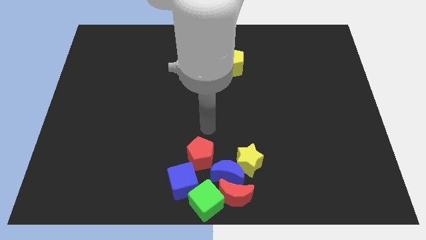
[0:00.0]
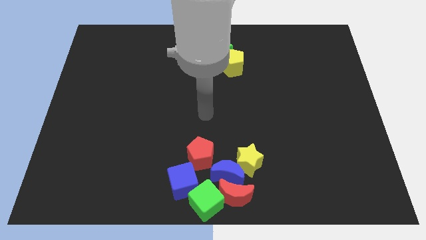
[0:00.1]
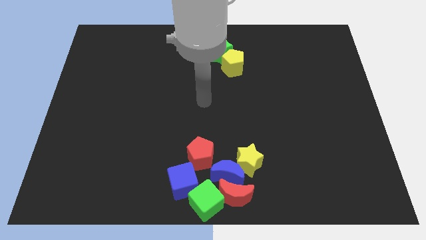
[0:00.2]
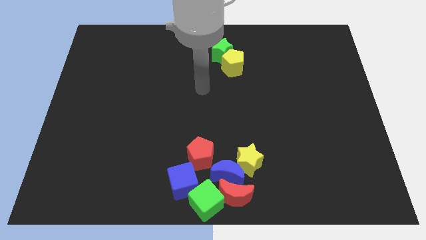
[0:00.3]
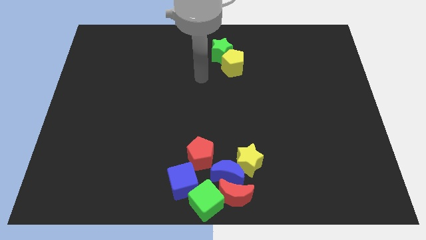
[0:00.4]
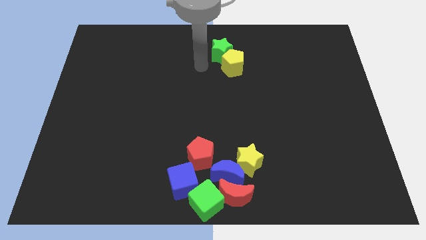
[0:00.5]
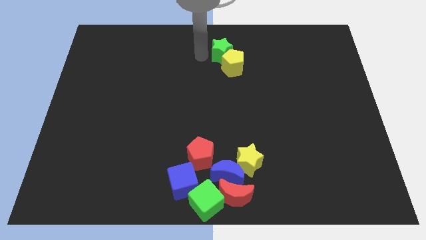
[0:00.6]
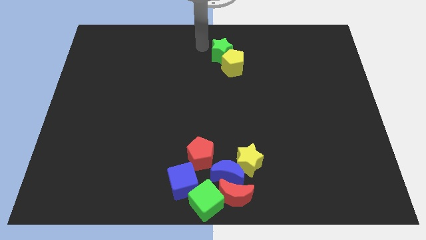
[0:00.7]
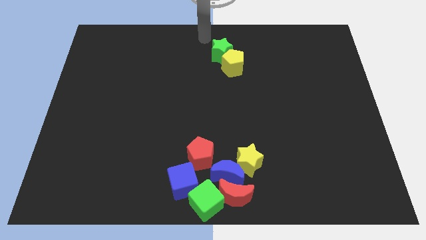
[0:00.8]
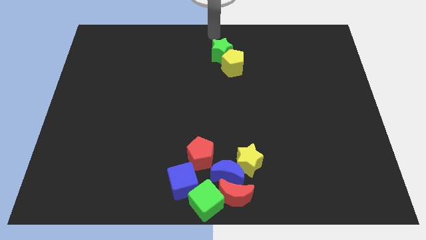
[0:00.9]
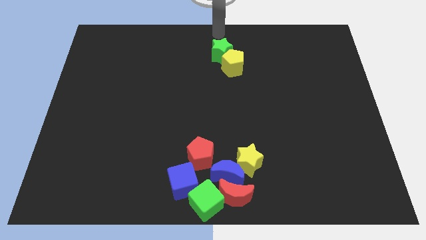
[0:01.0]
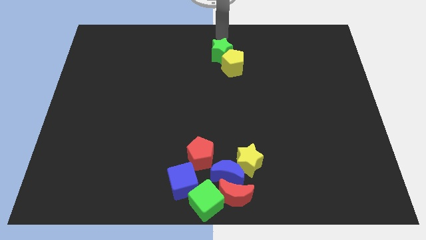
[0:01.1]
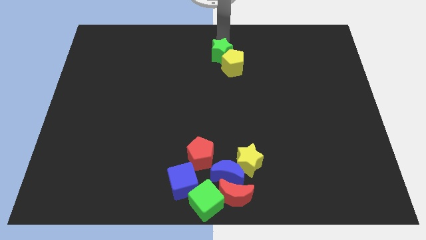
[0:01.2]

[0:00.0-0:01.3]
touch the green star with your arm

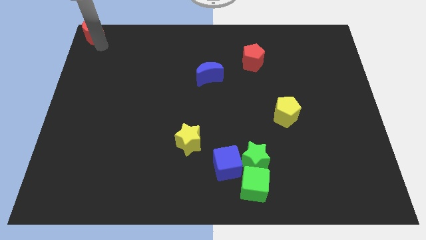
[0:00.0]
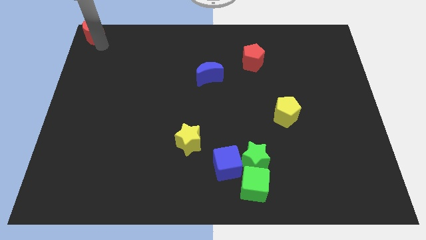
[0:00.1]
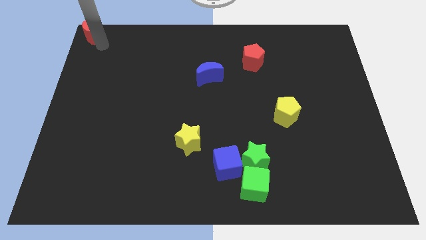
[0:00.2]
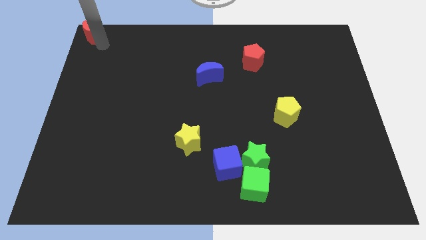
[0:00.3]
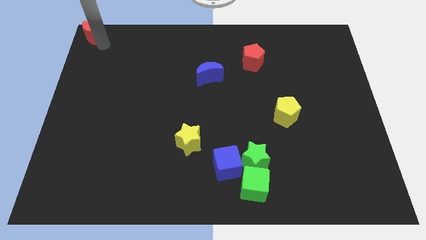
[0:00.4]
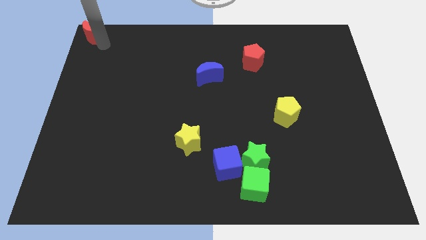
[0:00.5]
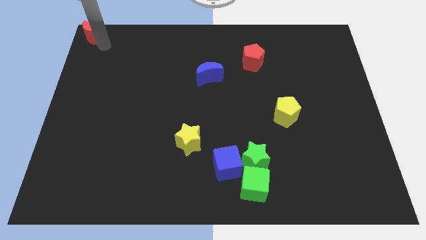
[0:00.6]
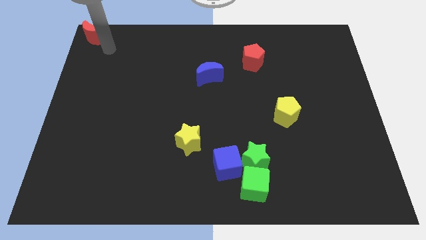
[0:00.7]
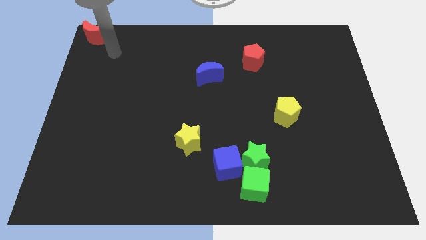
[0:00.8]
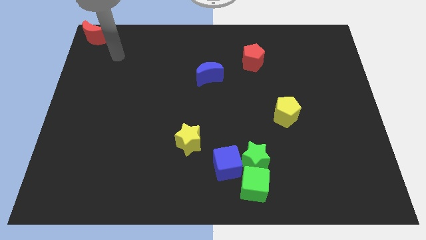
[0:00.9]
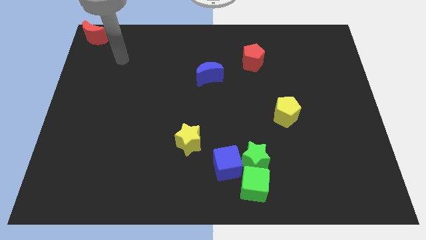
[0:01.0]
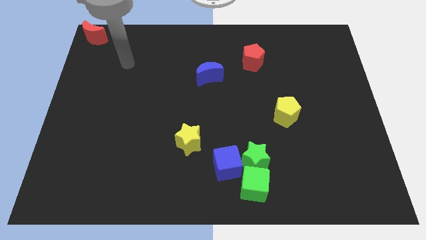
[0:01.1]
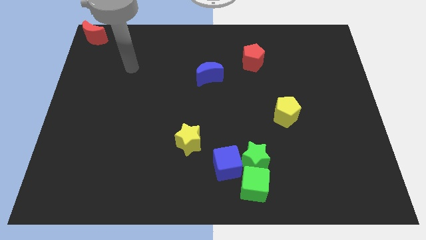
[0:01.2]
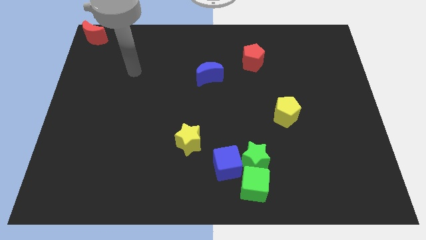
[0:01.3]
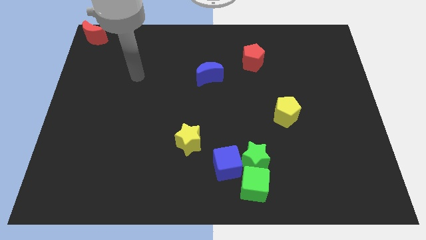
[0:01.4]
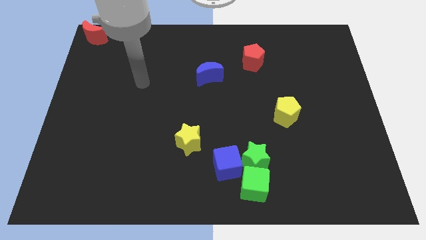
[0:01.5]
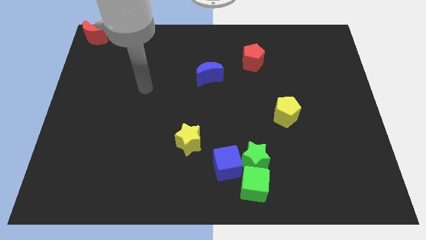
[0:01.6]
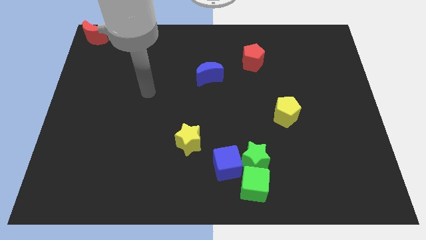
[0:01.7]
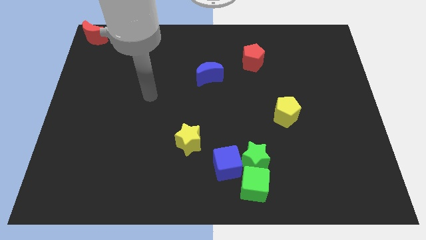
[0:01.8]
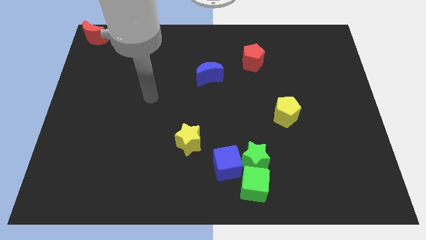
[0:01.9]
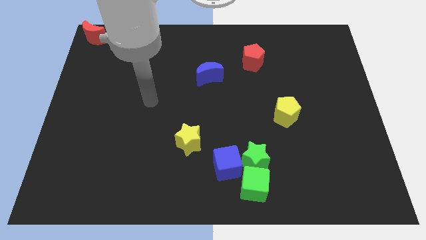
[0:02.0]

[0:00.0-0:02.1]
move your arm away from red moon

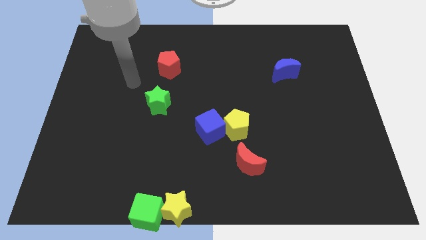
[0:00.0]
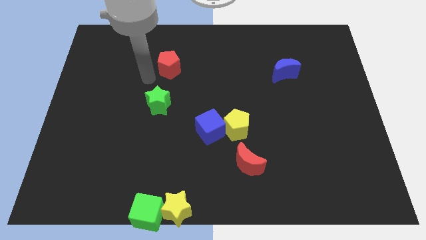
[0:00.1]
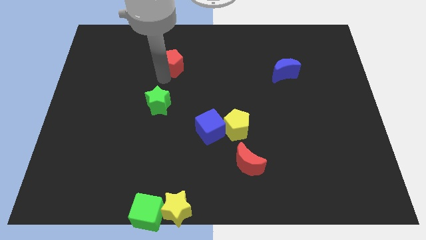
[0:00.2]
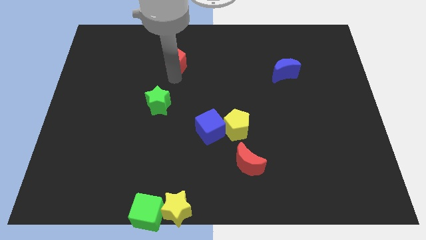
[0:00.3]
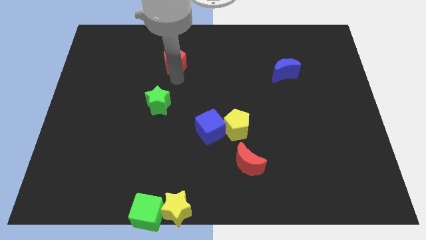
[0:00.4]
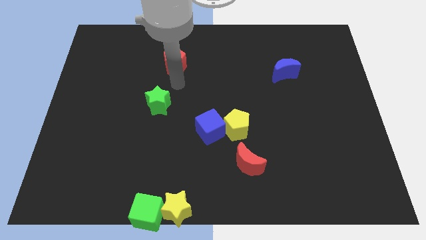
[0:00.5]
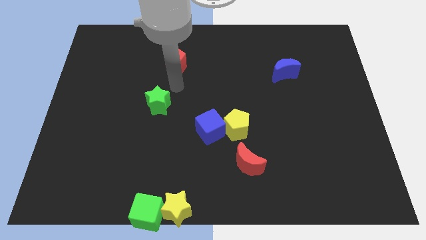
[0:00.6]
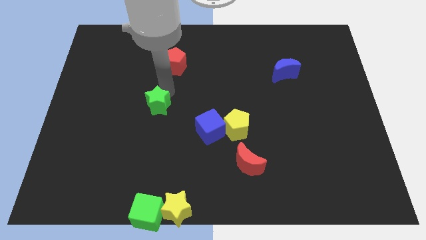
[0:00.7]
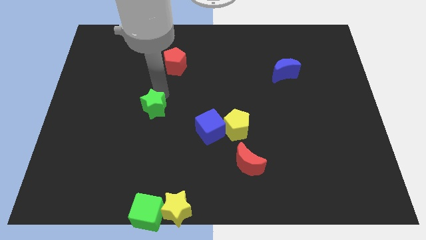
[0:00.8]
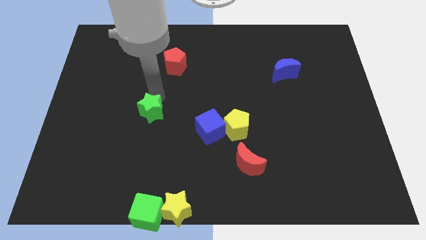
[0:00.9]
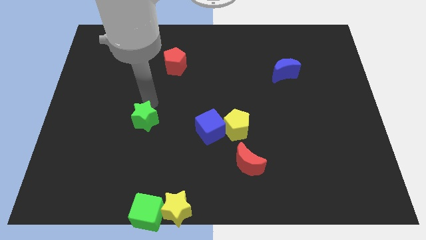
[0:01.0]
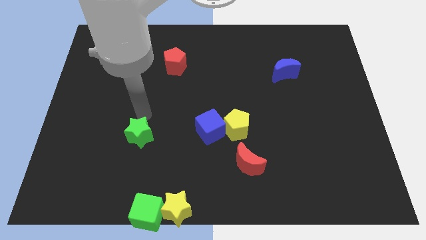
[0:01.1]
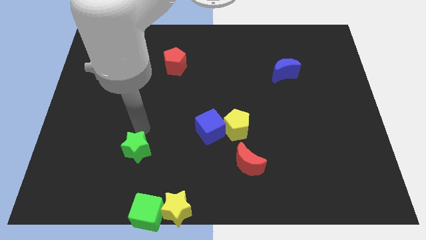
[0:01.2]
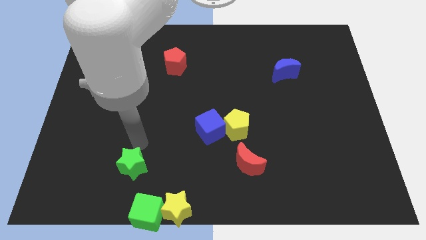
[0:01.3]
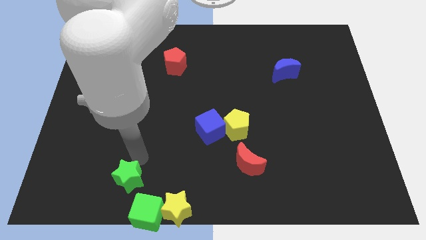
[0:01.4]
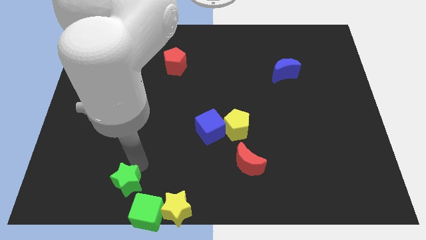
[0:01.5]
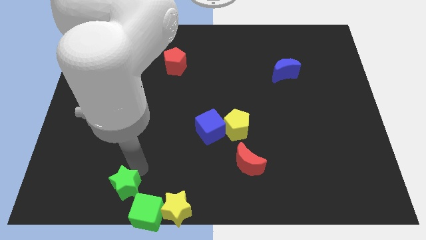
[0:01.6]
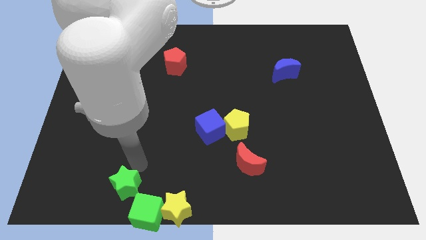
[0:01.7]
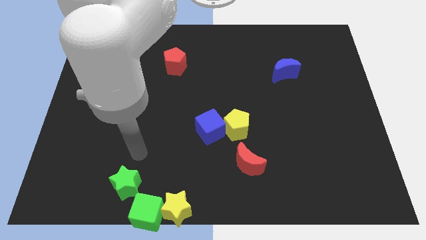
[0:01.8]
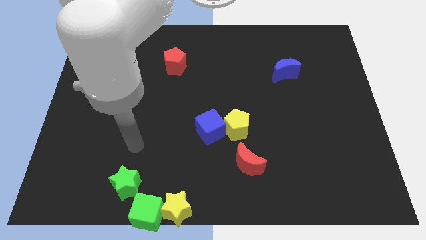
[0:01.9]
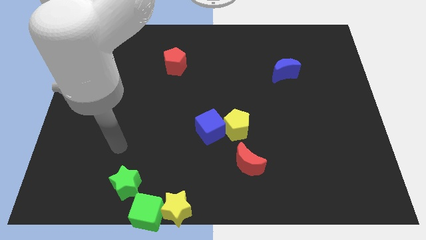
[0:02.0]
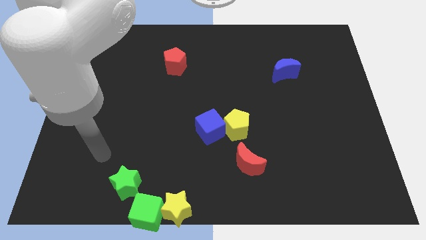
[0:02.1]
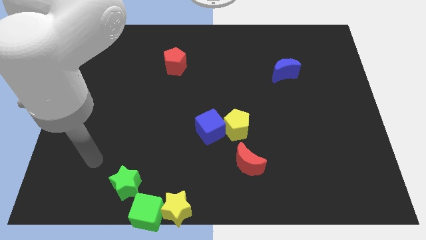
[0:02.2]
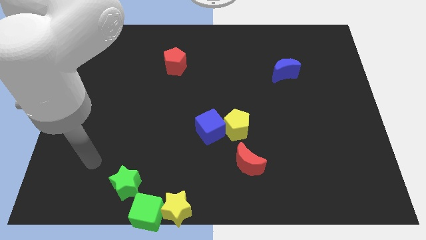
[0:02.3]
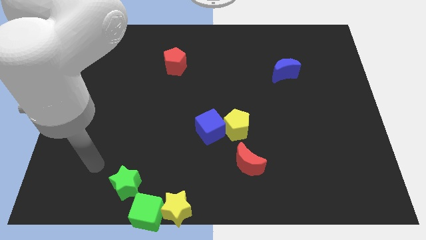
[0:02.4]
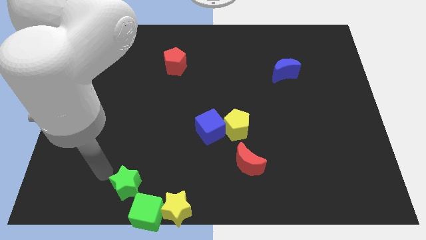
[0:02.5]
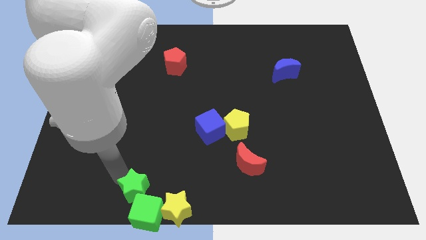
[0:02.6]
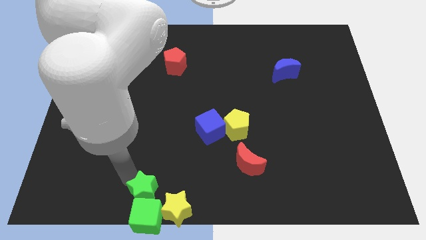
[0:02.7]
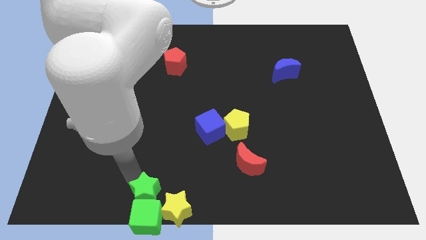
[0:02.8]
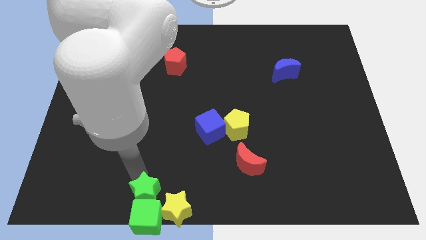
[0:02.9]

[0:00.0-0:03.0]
move the green star above the green cube

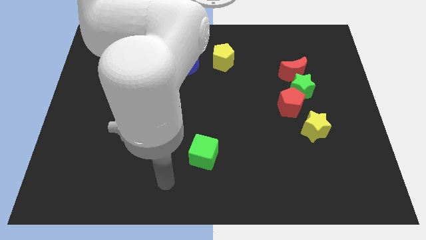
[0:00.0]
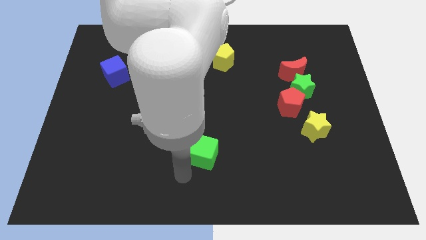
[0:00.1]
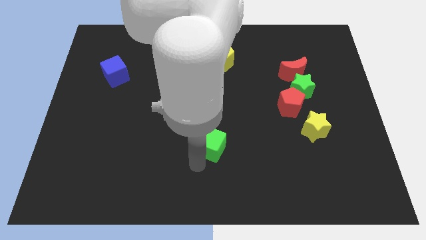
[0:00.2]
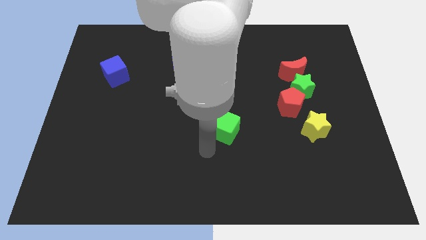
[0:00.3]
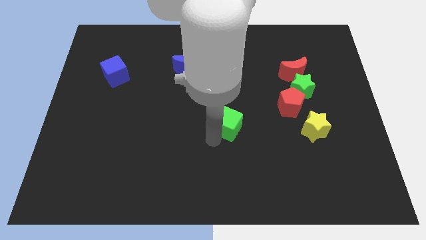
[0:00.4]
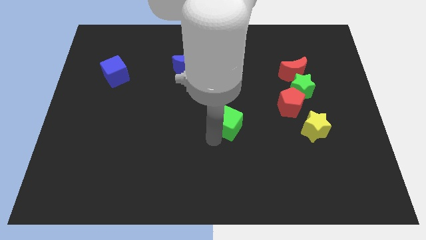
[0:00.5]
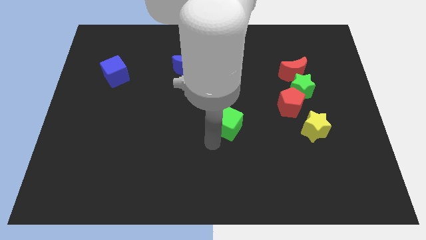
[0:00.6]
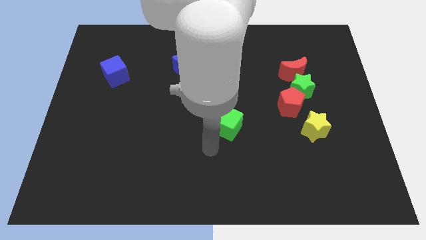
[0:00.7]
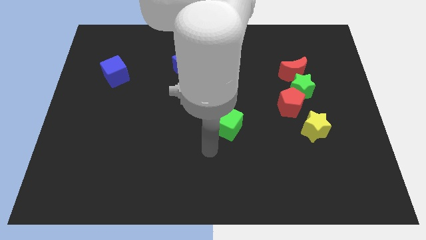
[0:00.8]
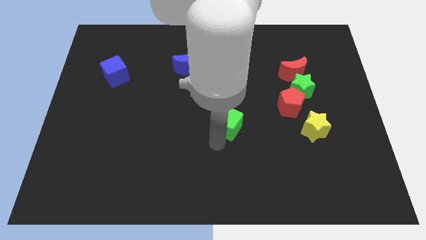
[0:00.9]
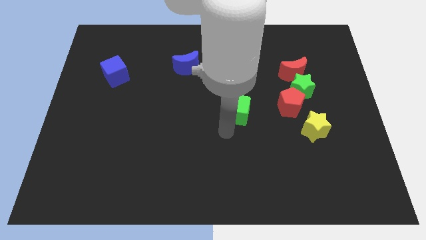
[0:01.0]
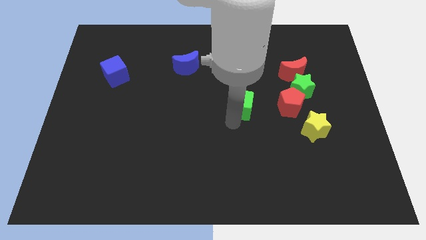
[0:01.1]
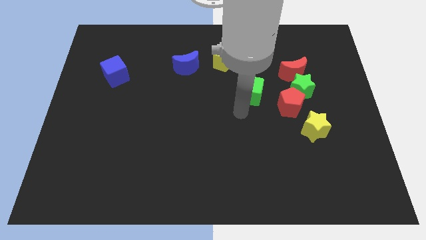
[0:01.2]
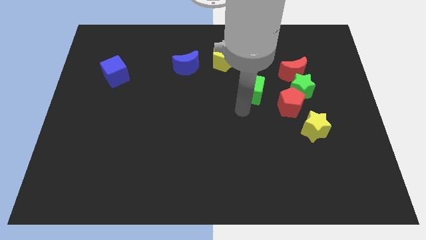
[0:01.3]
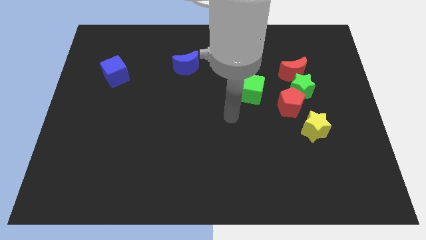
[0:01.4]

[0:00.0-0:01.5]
move the green cube towards the red crescent

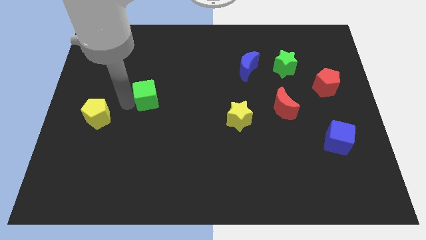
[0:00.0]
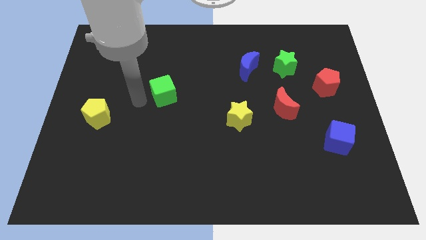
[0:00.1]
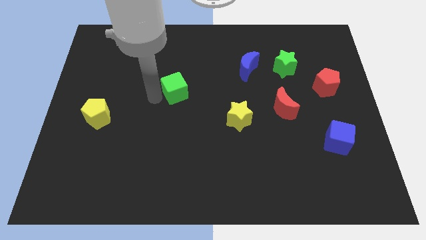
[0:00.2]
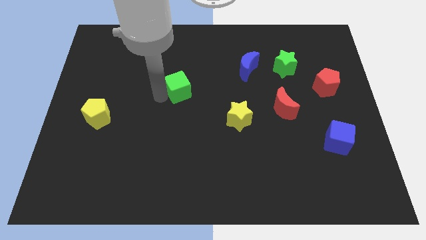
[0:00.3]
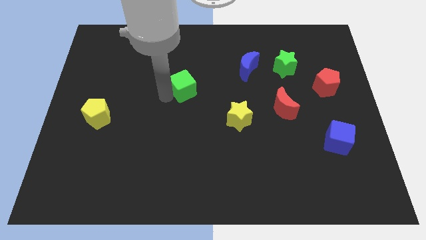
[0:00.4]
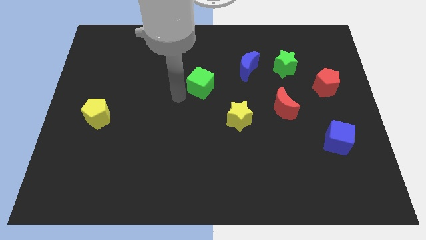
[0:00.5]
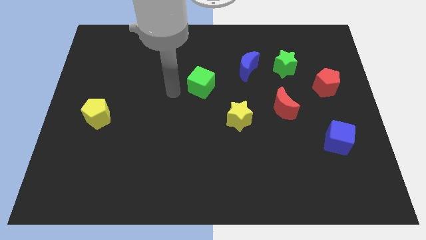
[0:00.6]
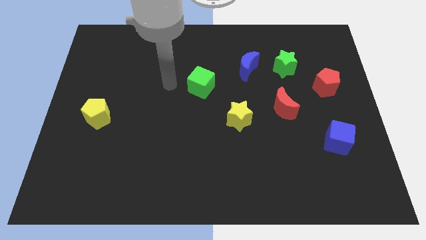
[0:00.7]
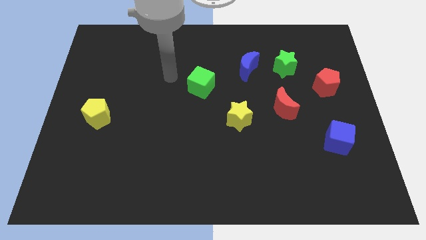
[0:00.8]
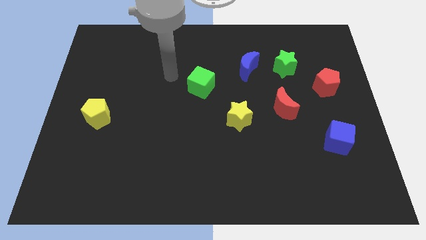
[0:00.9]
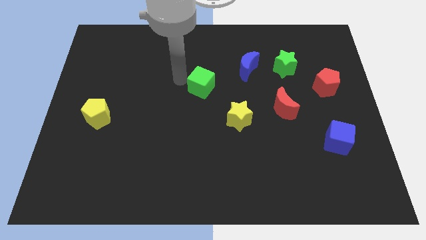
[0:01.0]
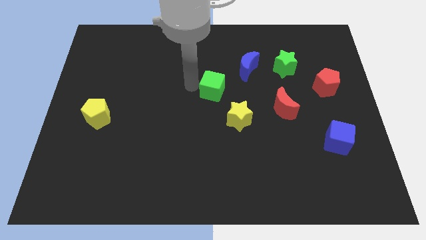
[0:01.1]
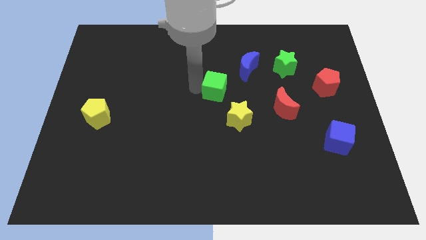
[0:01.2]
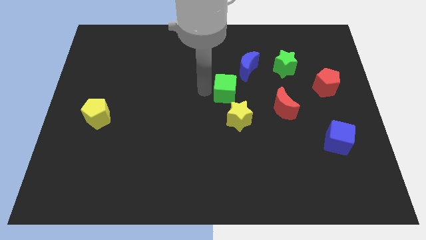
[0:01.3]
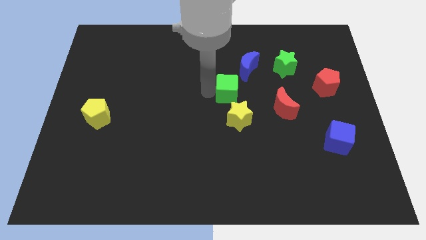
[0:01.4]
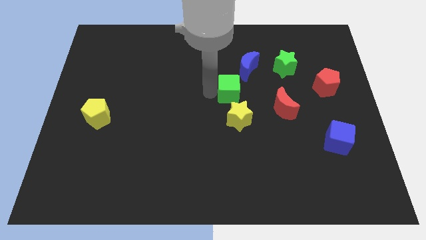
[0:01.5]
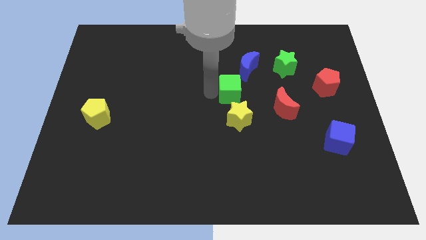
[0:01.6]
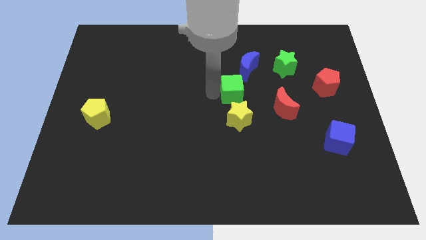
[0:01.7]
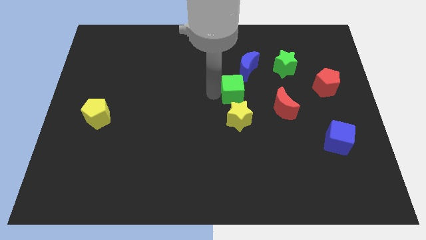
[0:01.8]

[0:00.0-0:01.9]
push the green cube to the top side of yellow pentagon
